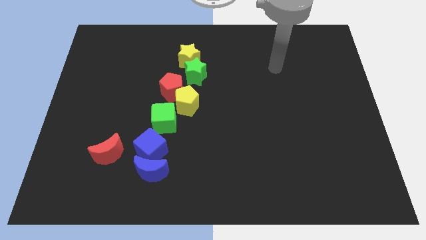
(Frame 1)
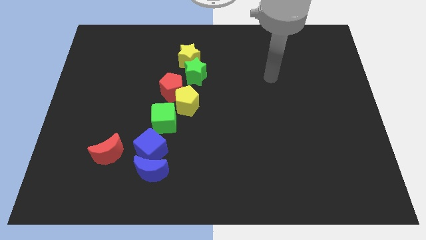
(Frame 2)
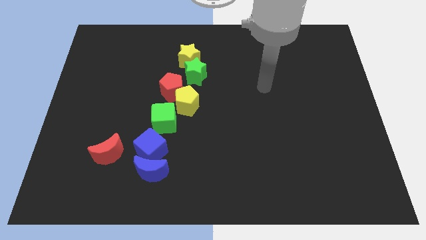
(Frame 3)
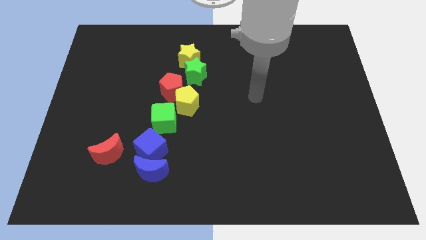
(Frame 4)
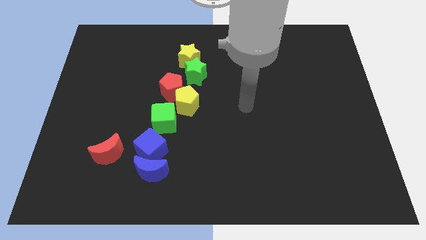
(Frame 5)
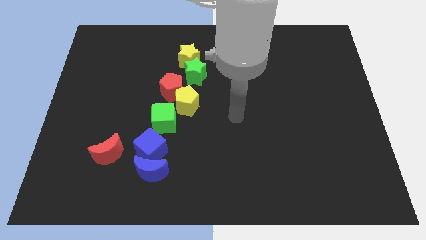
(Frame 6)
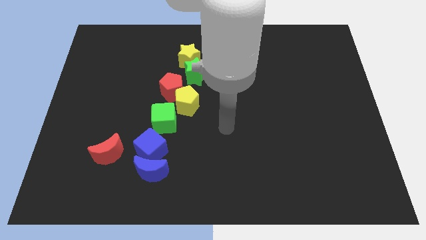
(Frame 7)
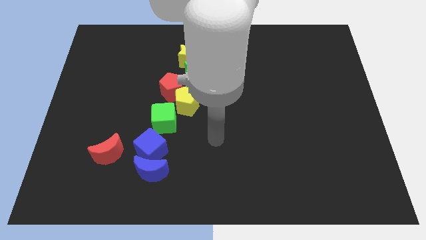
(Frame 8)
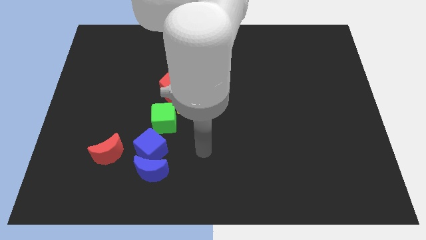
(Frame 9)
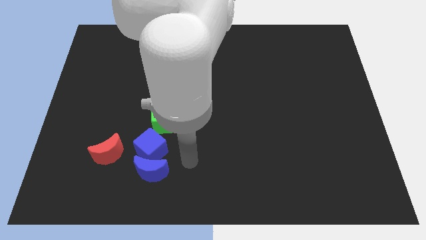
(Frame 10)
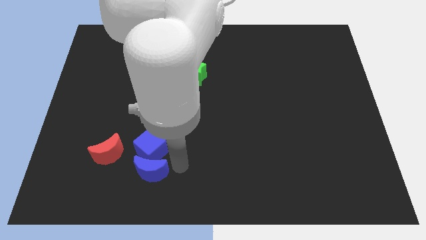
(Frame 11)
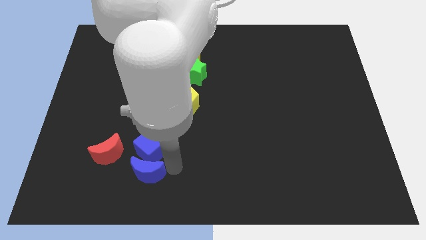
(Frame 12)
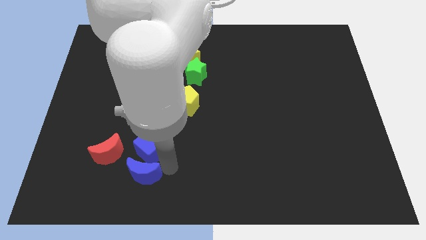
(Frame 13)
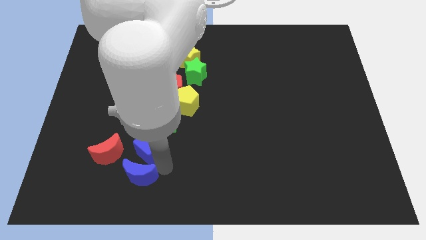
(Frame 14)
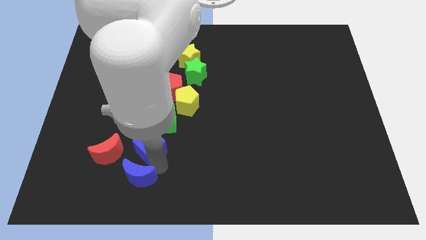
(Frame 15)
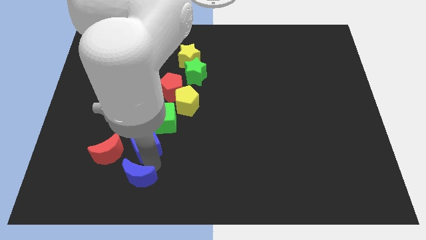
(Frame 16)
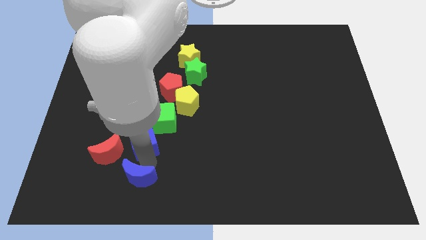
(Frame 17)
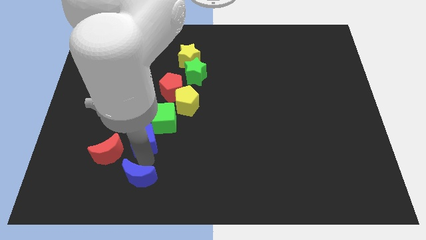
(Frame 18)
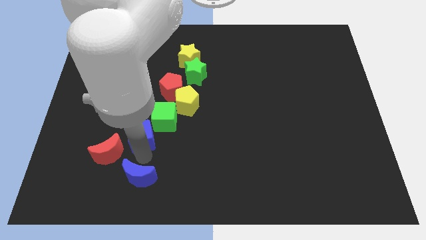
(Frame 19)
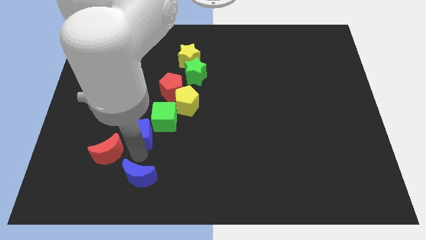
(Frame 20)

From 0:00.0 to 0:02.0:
move your arm towards the blue moon

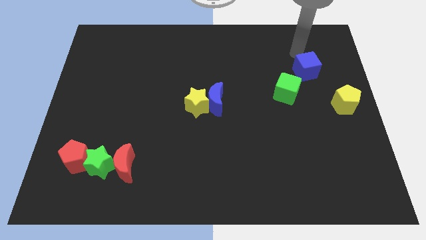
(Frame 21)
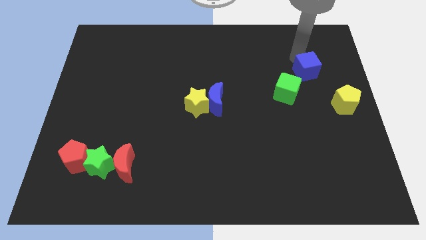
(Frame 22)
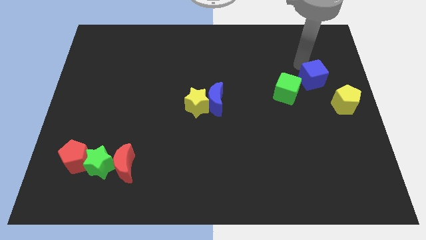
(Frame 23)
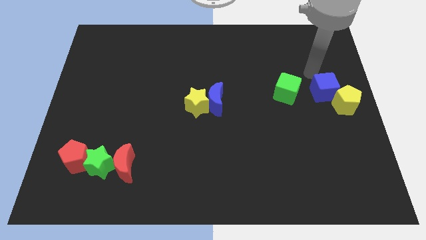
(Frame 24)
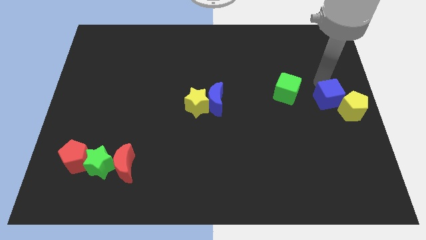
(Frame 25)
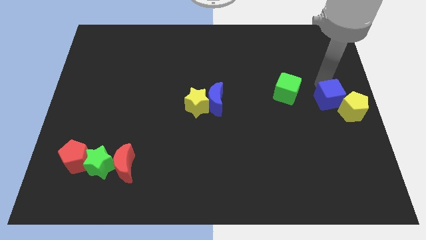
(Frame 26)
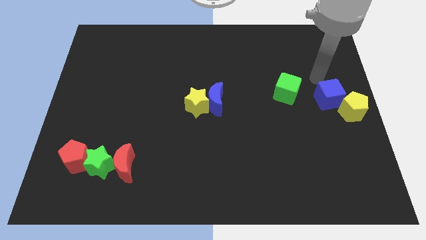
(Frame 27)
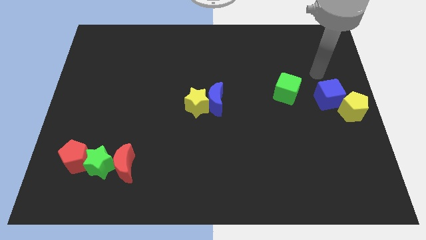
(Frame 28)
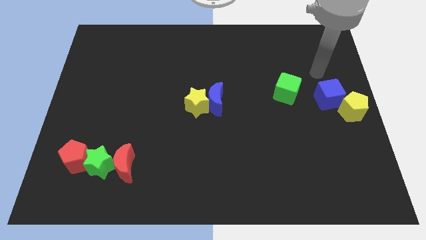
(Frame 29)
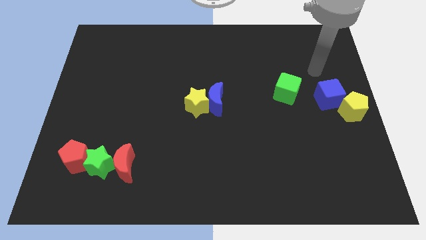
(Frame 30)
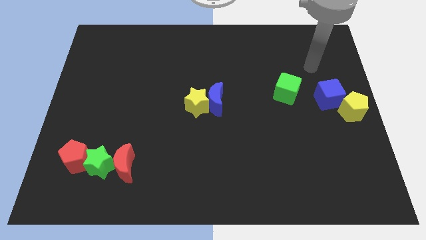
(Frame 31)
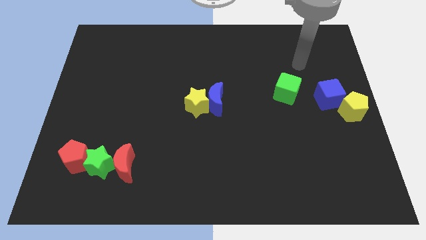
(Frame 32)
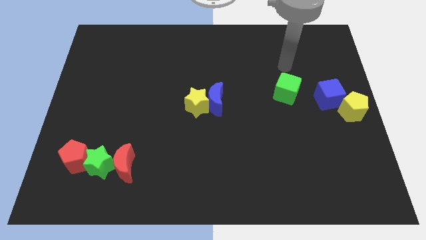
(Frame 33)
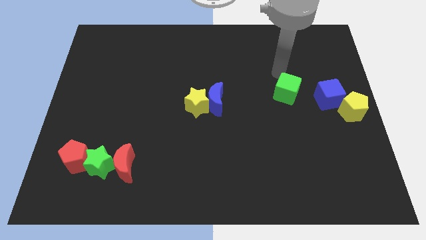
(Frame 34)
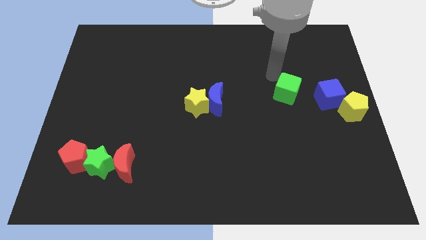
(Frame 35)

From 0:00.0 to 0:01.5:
push the blue cube into the yellow pentagon

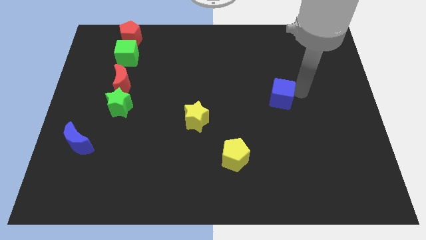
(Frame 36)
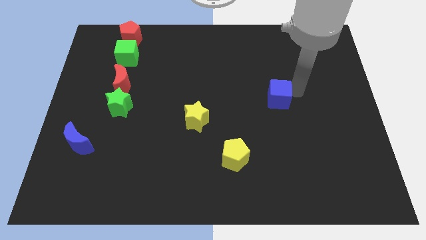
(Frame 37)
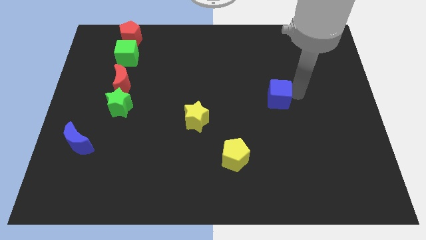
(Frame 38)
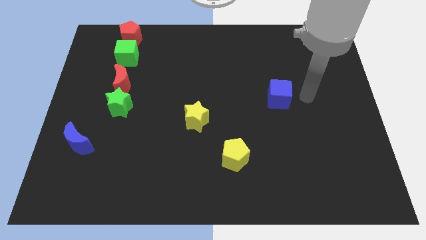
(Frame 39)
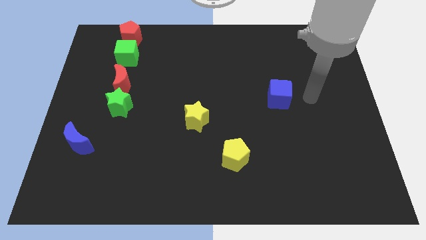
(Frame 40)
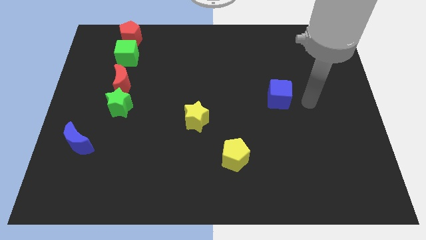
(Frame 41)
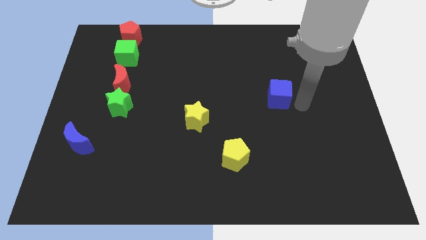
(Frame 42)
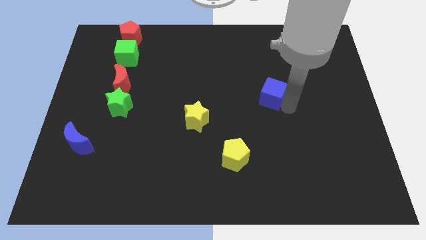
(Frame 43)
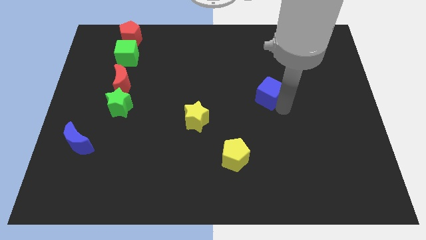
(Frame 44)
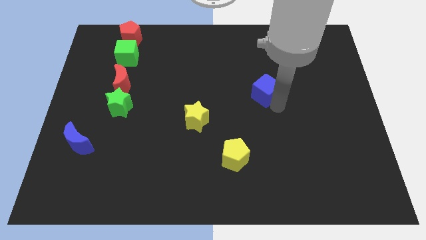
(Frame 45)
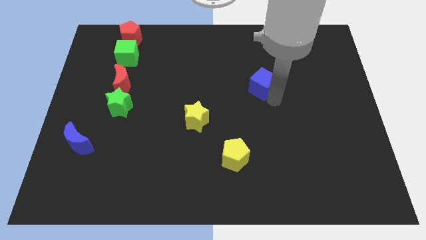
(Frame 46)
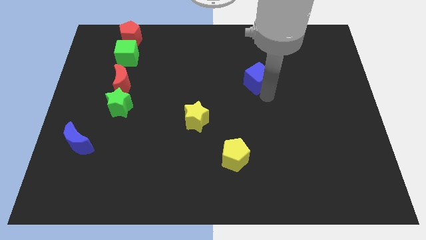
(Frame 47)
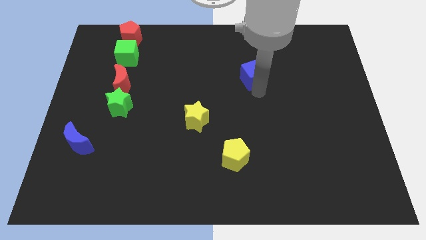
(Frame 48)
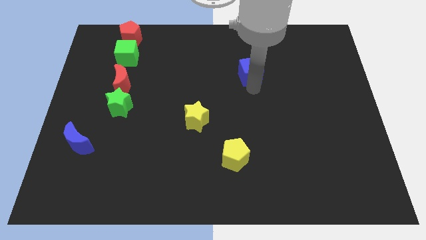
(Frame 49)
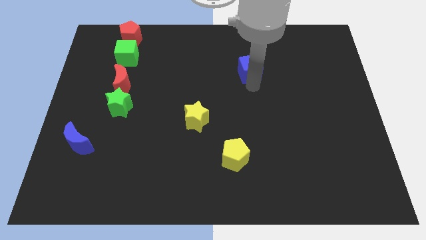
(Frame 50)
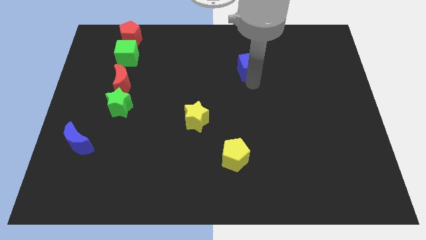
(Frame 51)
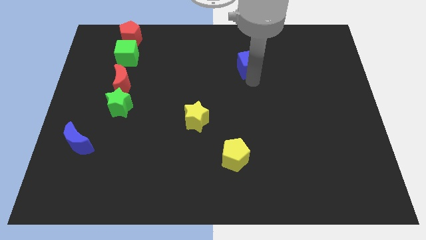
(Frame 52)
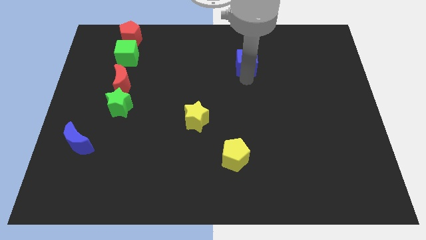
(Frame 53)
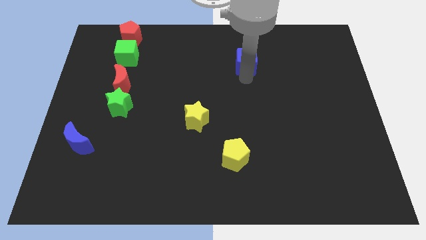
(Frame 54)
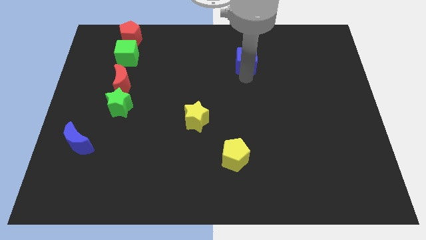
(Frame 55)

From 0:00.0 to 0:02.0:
move the blue cube slightly to the top

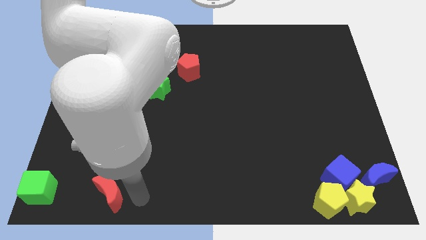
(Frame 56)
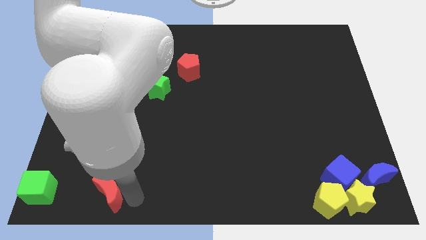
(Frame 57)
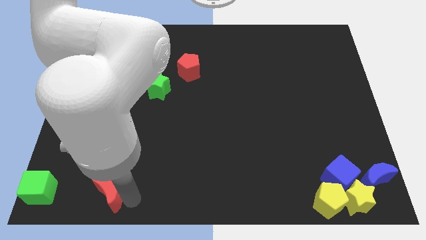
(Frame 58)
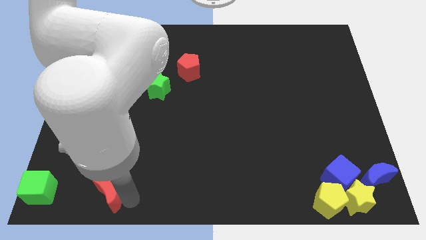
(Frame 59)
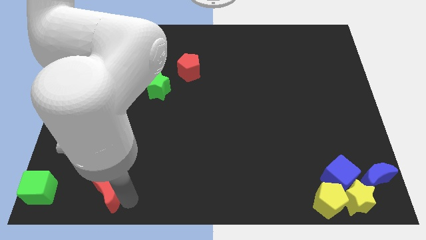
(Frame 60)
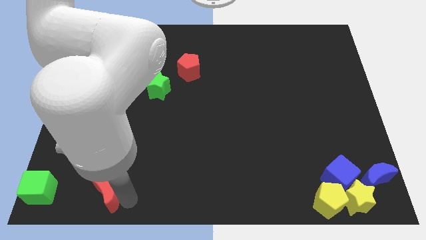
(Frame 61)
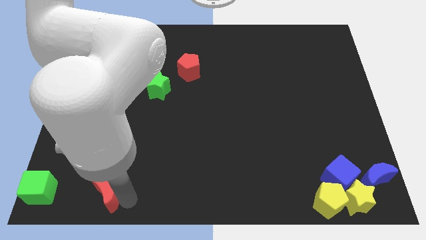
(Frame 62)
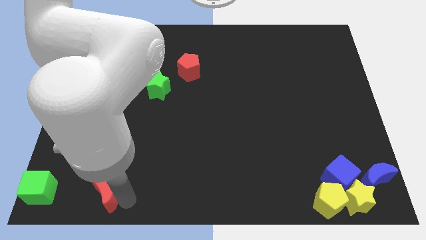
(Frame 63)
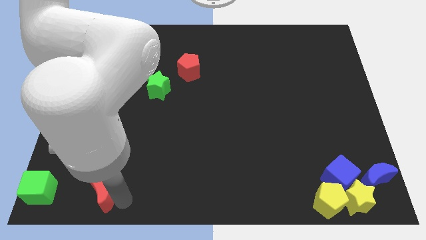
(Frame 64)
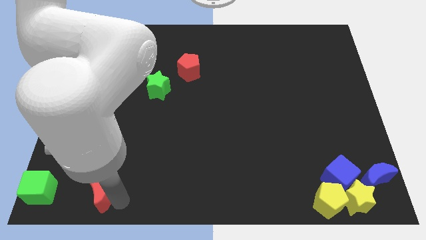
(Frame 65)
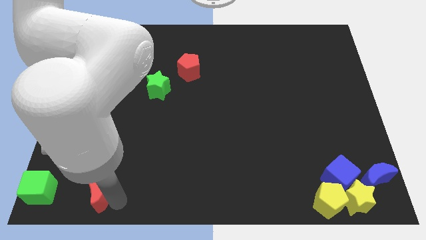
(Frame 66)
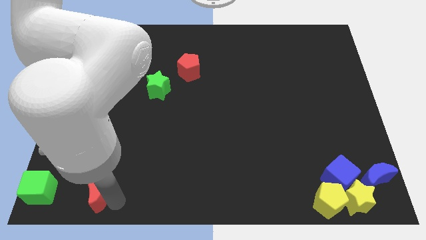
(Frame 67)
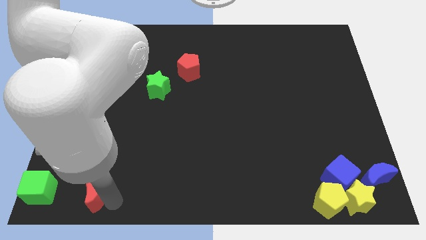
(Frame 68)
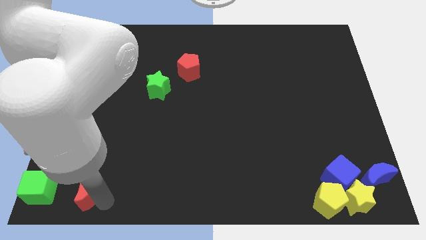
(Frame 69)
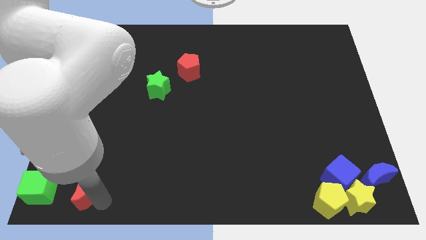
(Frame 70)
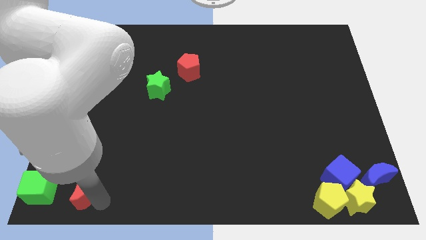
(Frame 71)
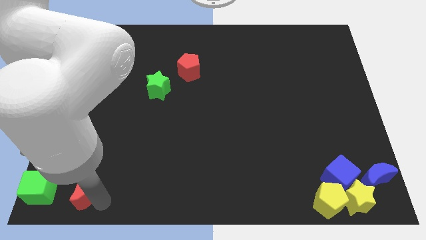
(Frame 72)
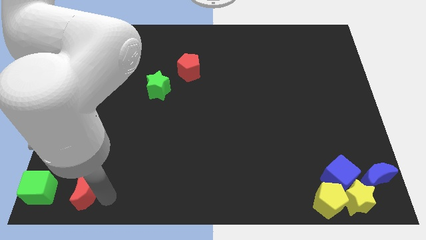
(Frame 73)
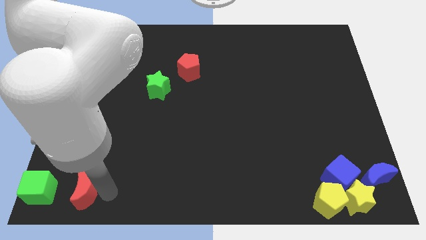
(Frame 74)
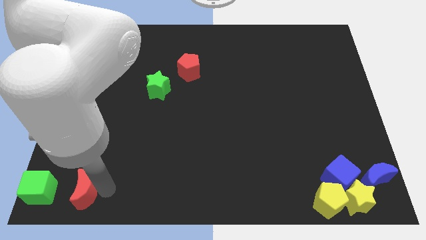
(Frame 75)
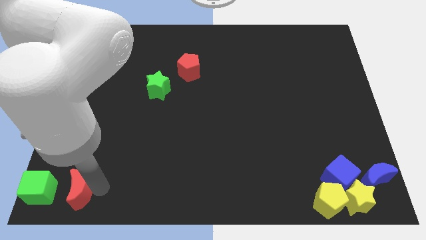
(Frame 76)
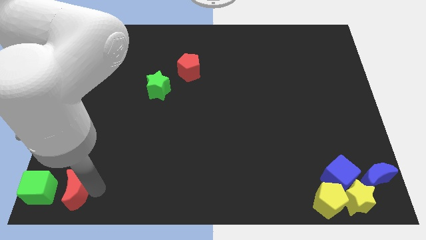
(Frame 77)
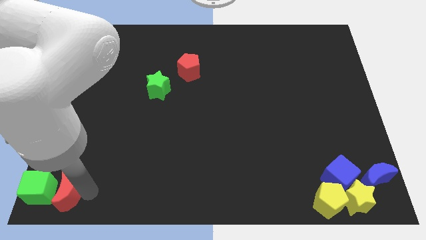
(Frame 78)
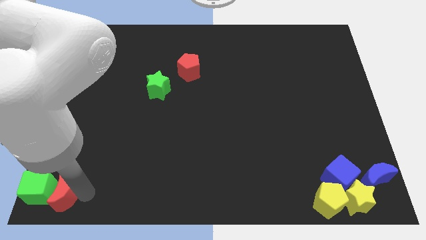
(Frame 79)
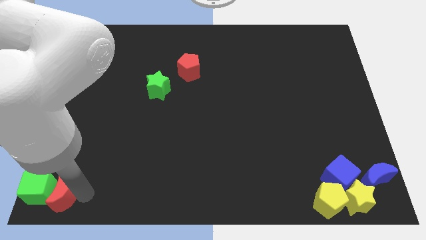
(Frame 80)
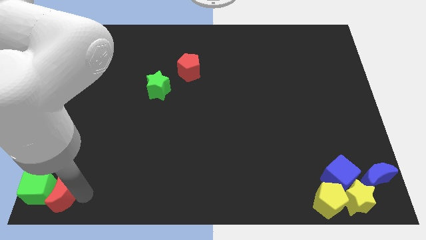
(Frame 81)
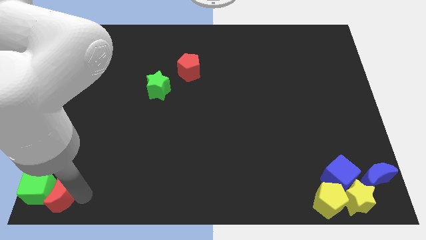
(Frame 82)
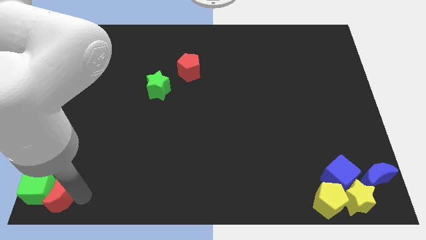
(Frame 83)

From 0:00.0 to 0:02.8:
move the red crescent close to the green cube

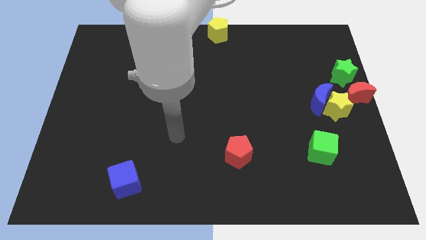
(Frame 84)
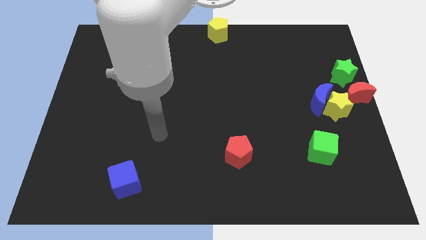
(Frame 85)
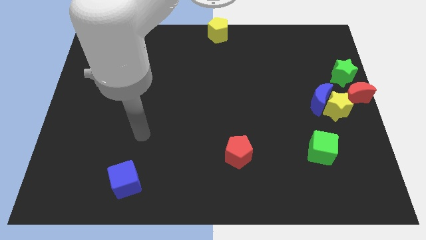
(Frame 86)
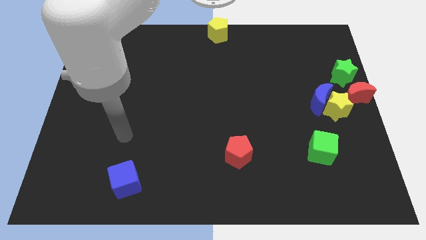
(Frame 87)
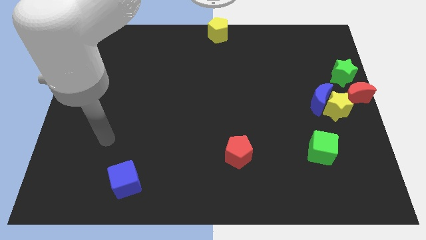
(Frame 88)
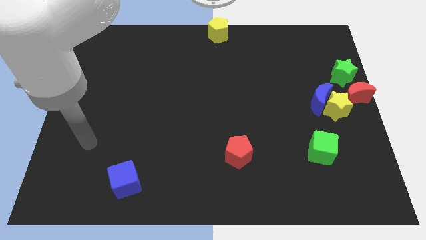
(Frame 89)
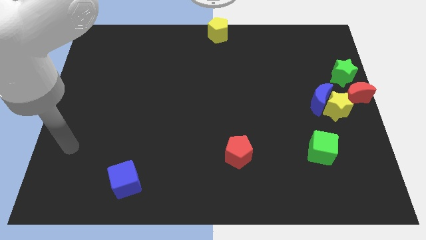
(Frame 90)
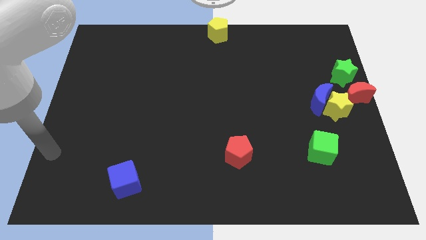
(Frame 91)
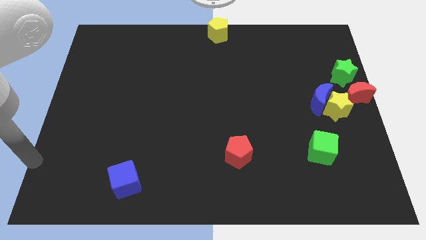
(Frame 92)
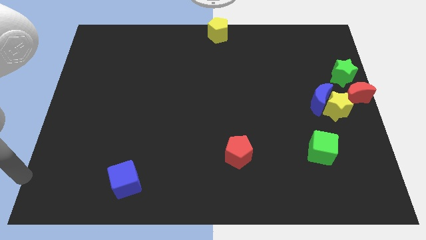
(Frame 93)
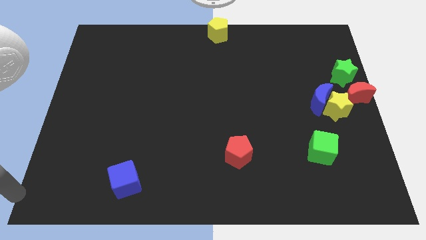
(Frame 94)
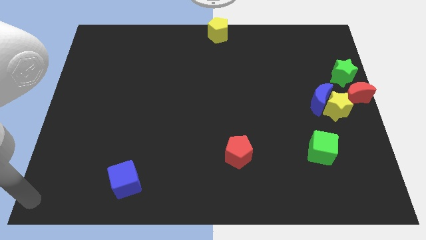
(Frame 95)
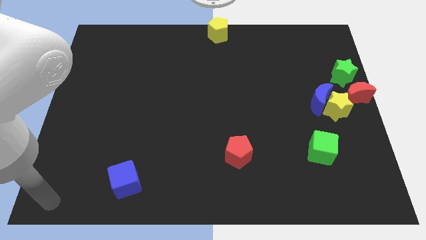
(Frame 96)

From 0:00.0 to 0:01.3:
place your arm at the bottom left corner of the board
